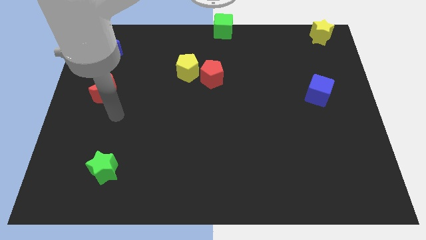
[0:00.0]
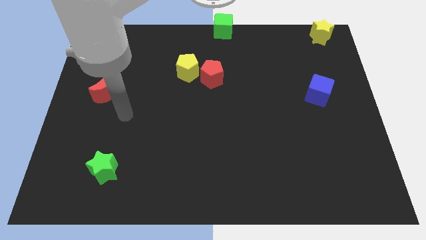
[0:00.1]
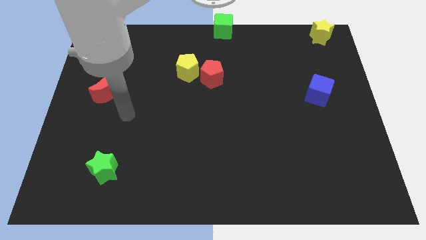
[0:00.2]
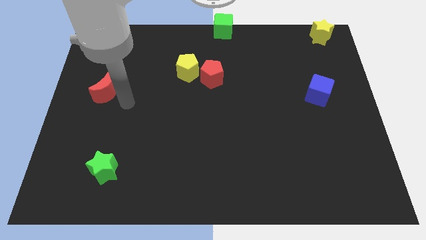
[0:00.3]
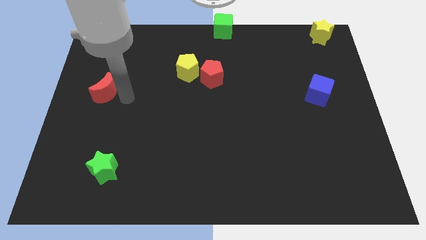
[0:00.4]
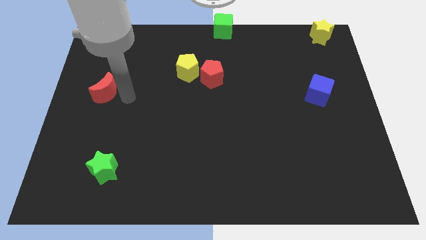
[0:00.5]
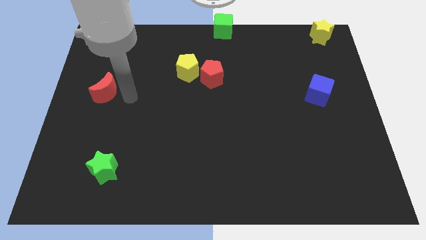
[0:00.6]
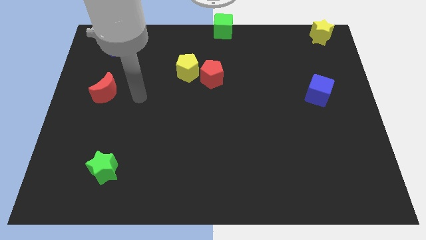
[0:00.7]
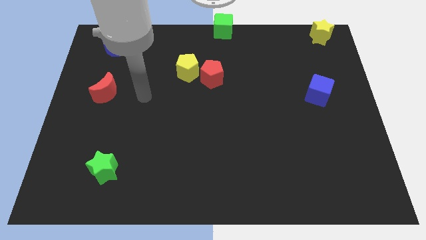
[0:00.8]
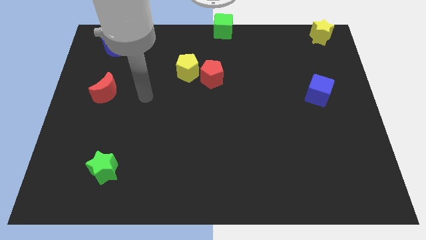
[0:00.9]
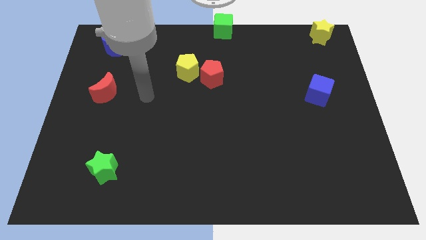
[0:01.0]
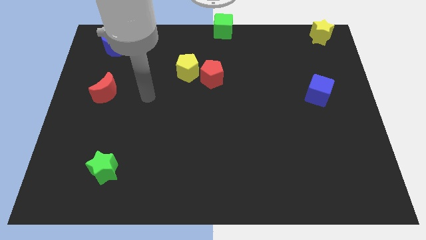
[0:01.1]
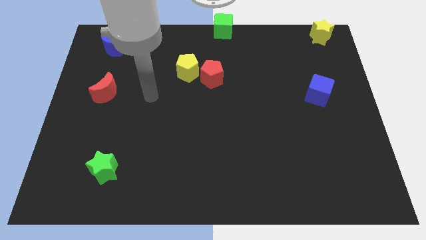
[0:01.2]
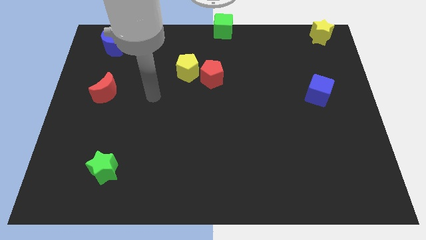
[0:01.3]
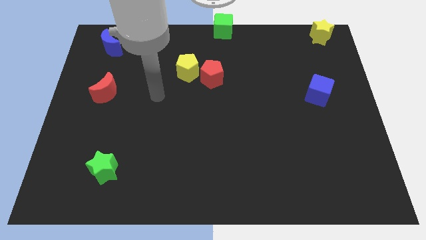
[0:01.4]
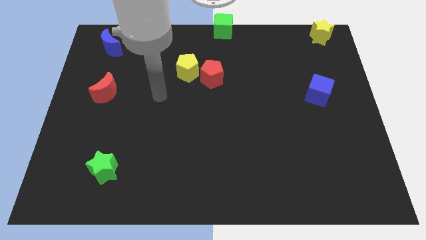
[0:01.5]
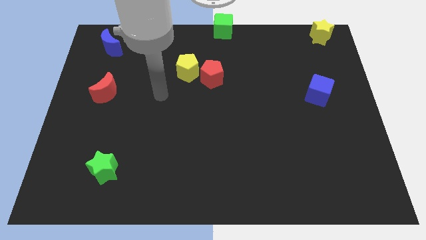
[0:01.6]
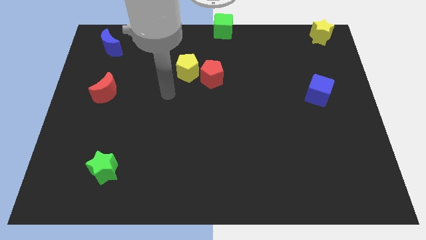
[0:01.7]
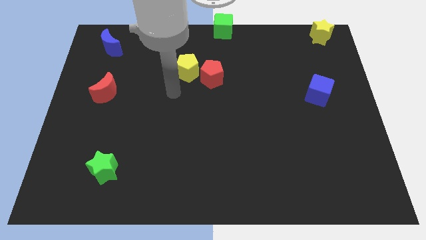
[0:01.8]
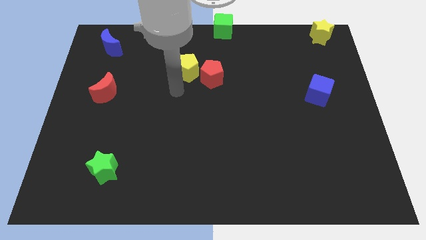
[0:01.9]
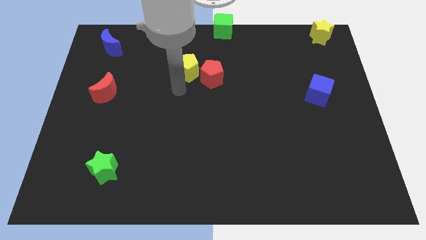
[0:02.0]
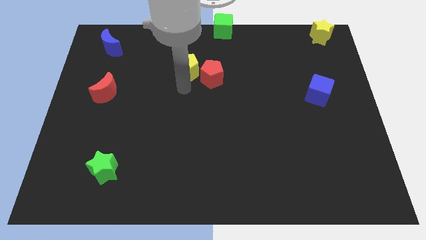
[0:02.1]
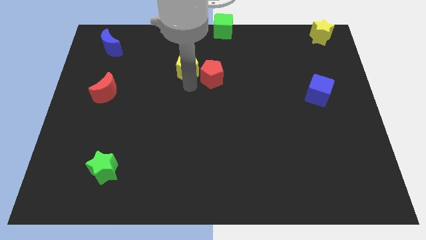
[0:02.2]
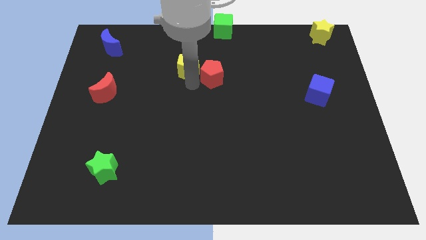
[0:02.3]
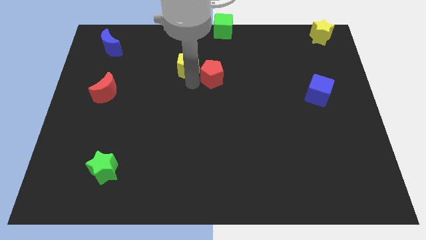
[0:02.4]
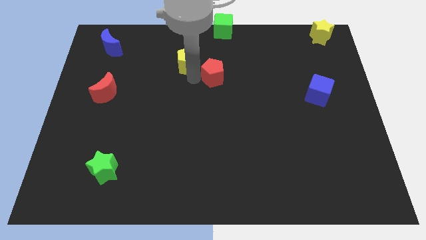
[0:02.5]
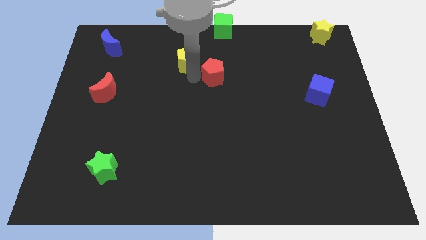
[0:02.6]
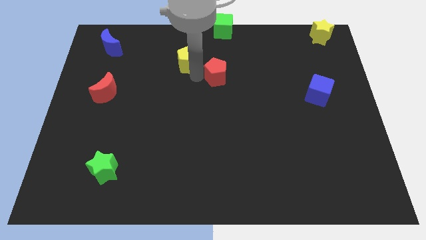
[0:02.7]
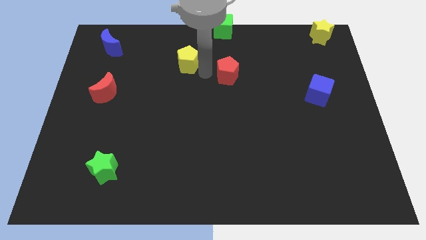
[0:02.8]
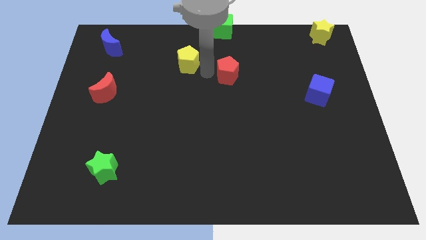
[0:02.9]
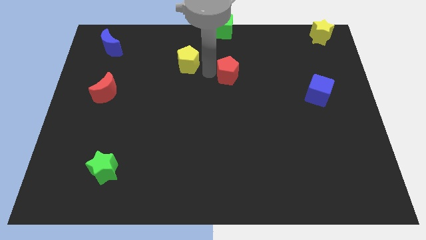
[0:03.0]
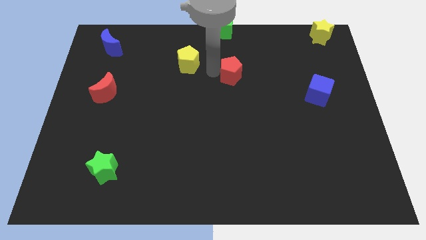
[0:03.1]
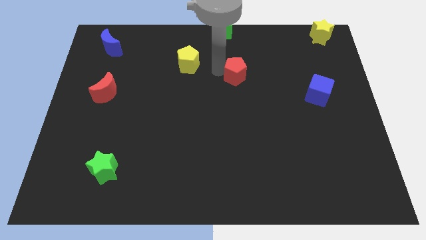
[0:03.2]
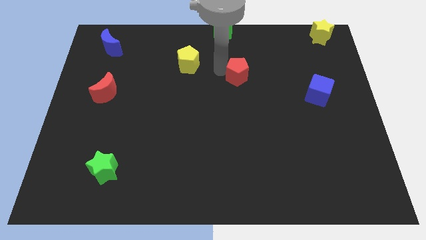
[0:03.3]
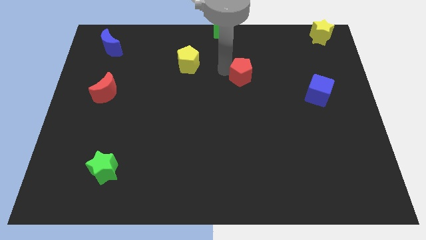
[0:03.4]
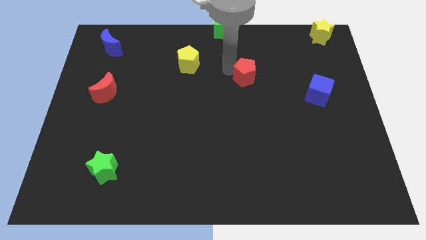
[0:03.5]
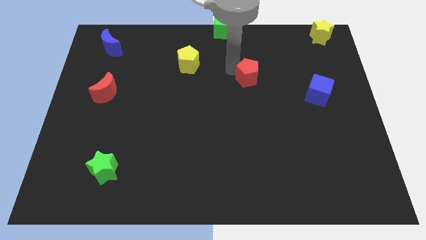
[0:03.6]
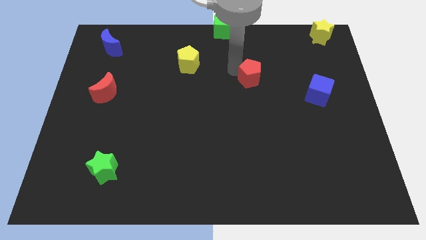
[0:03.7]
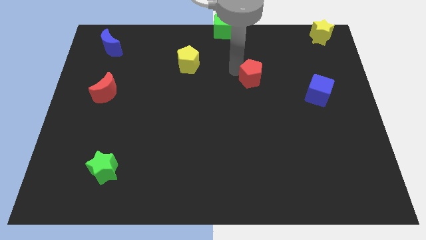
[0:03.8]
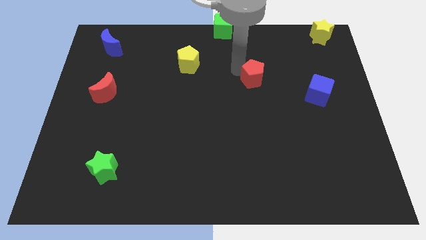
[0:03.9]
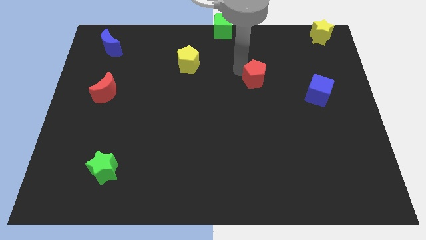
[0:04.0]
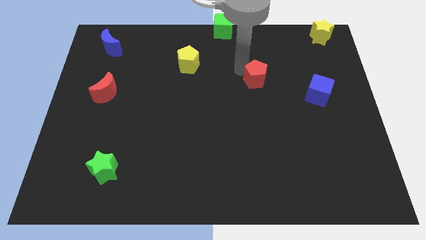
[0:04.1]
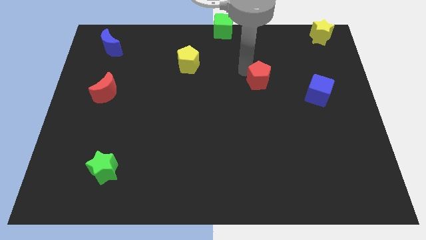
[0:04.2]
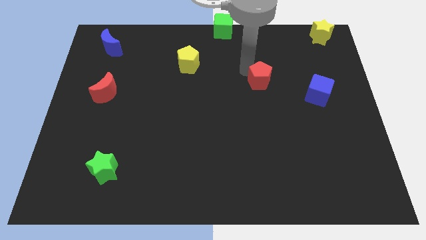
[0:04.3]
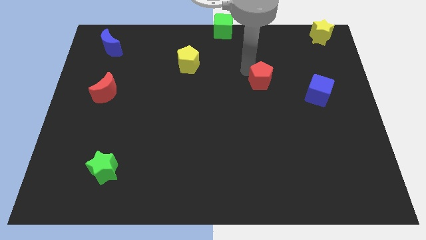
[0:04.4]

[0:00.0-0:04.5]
move the red pentagon away from the yellow pentagon

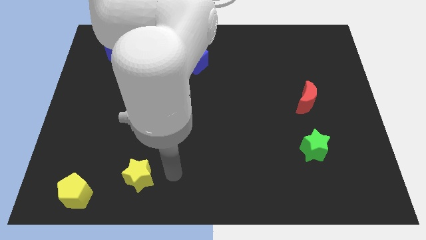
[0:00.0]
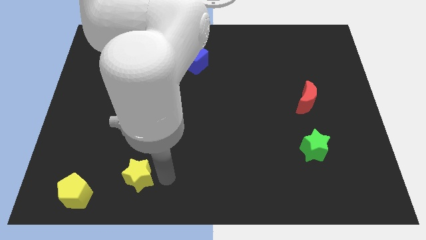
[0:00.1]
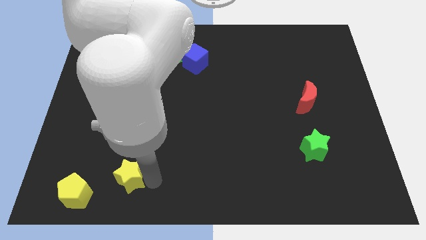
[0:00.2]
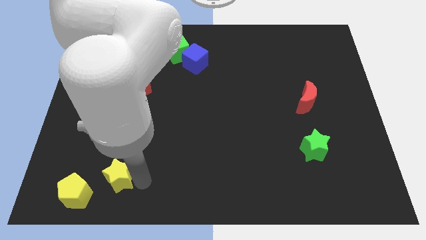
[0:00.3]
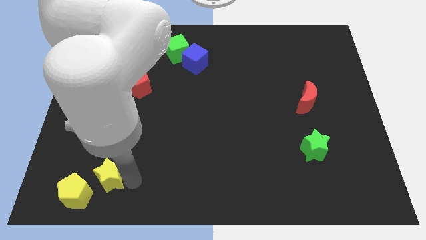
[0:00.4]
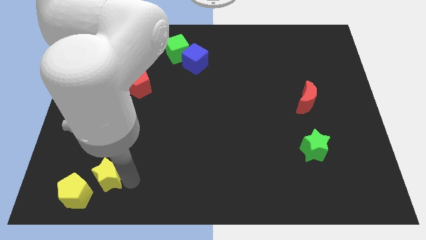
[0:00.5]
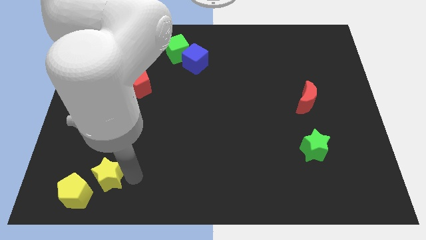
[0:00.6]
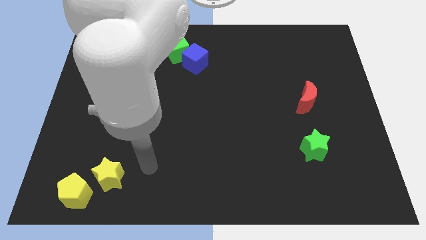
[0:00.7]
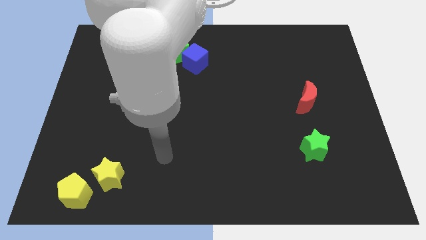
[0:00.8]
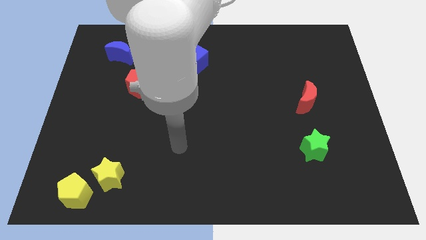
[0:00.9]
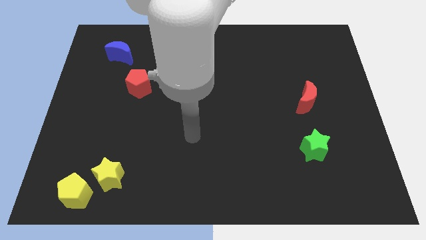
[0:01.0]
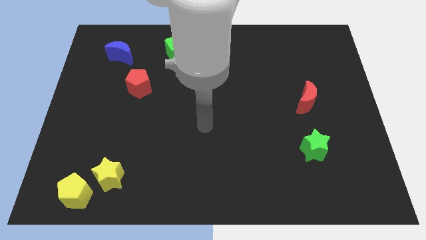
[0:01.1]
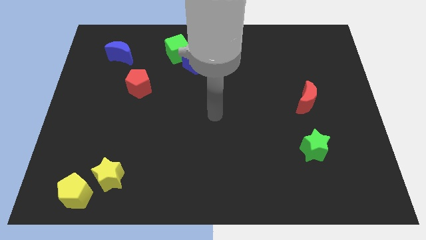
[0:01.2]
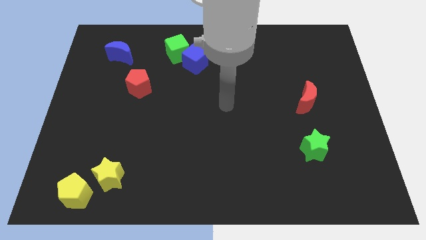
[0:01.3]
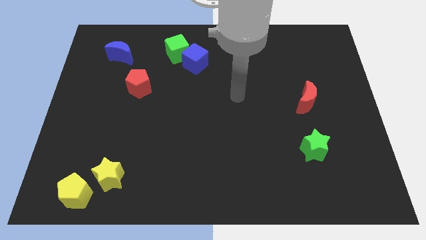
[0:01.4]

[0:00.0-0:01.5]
push the yellow star close to the yellow pentagon

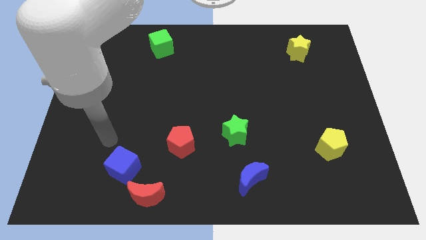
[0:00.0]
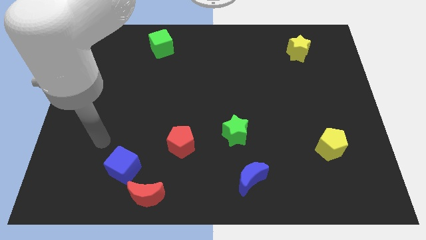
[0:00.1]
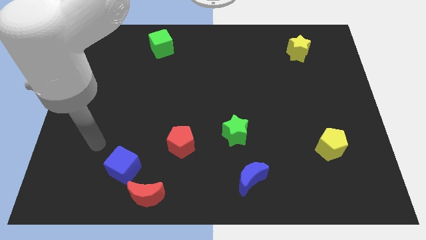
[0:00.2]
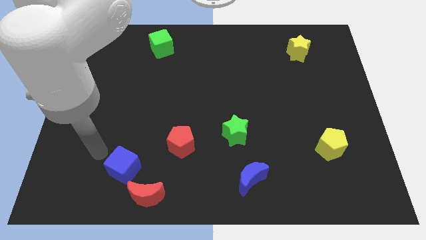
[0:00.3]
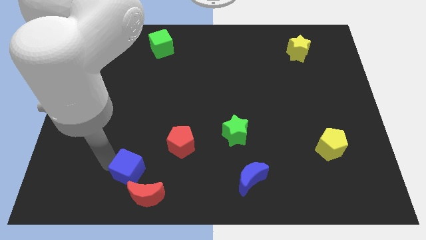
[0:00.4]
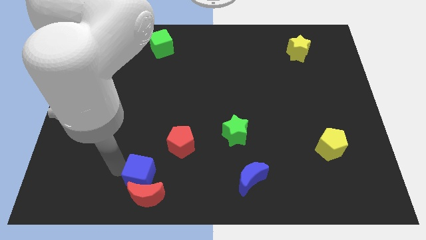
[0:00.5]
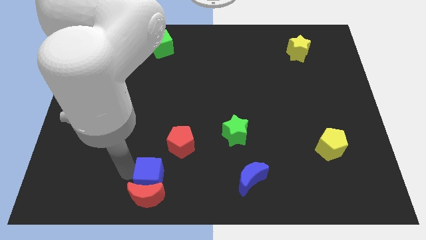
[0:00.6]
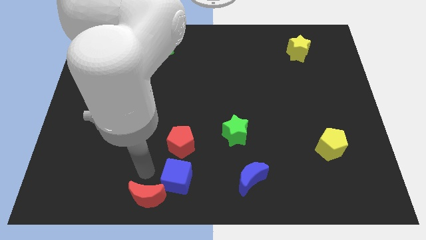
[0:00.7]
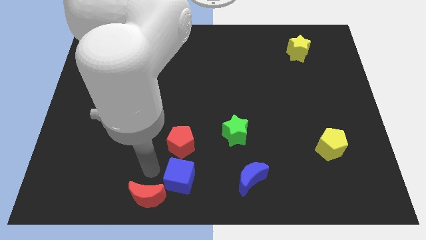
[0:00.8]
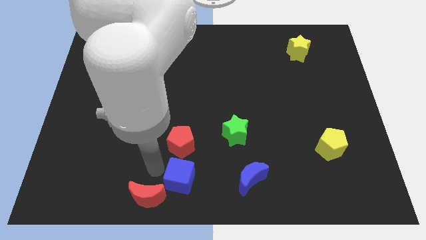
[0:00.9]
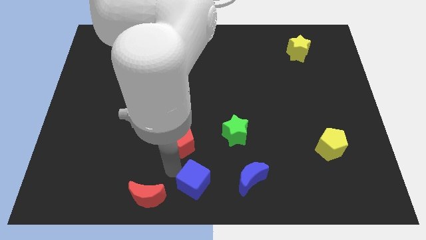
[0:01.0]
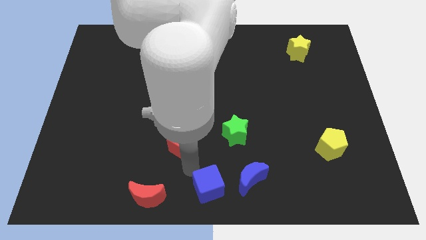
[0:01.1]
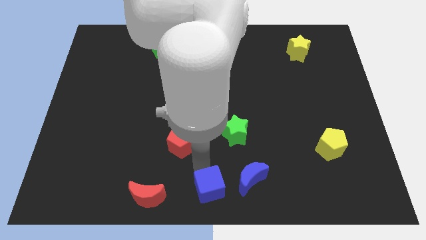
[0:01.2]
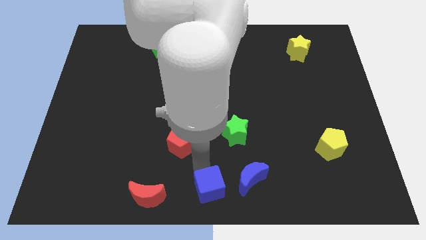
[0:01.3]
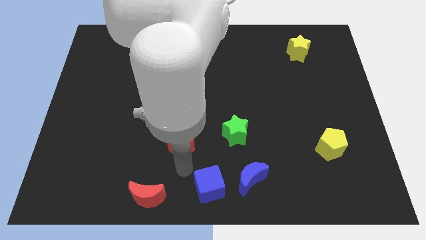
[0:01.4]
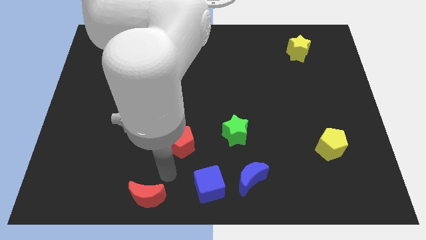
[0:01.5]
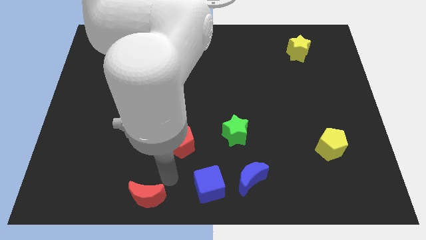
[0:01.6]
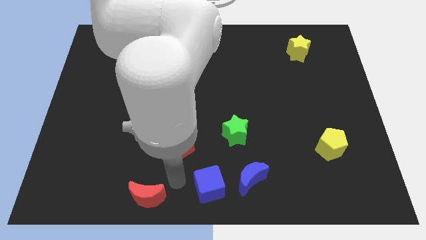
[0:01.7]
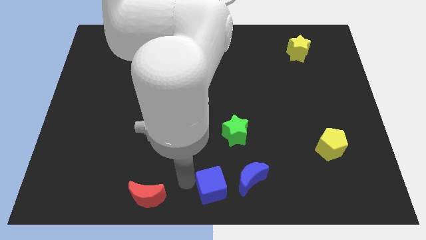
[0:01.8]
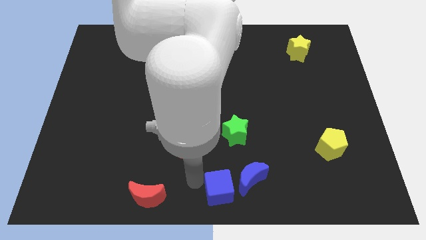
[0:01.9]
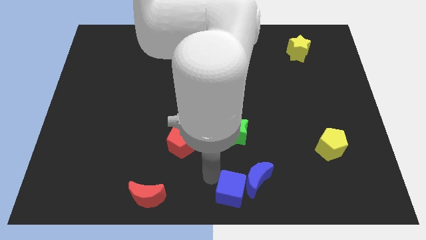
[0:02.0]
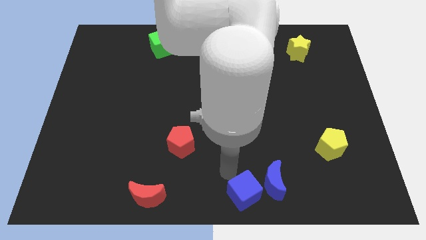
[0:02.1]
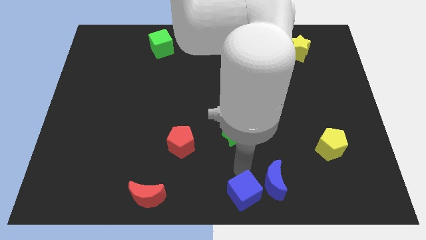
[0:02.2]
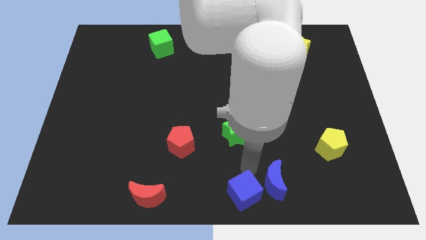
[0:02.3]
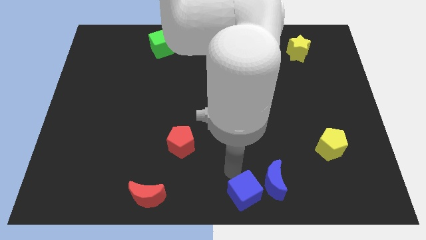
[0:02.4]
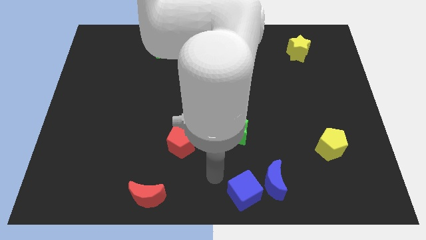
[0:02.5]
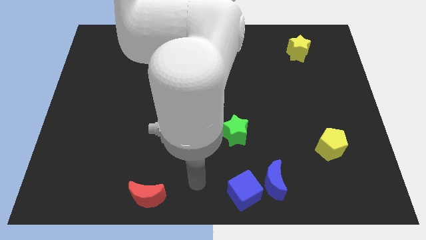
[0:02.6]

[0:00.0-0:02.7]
push blue cube into blue moon

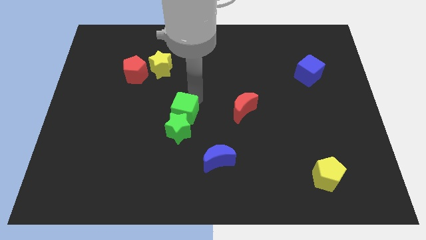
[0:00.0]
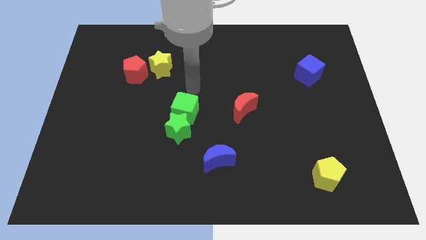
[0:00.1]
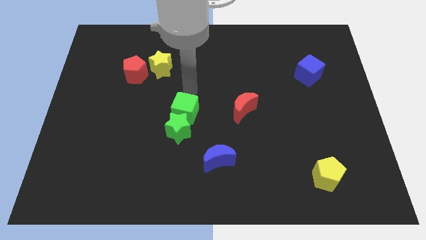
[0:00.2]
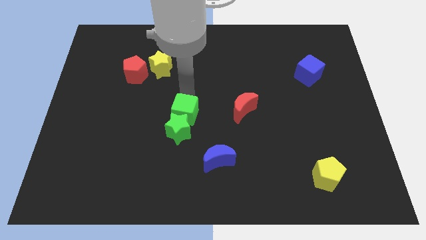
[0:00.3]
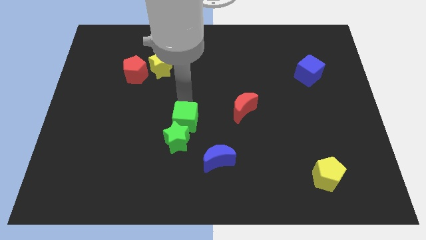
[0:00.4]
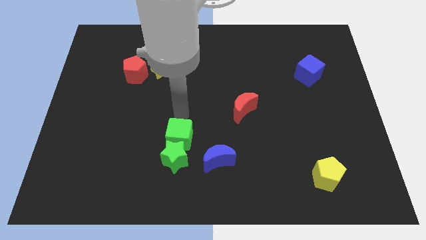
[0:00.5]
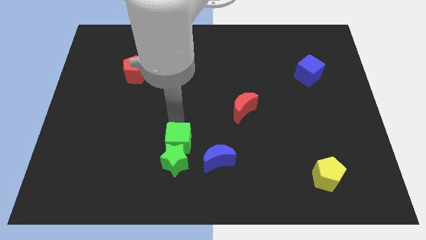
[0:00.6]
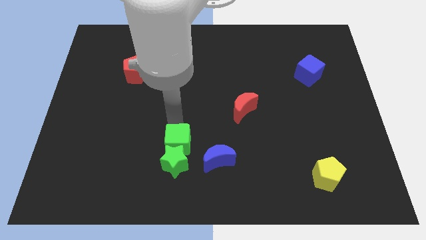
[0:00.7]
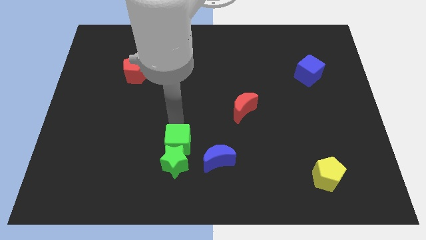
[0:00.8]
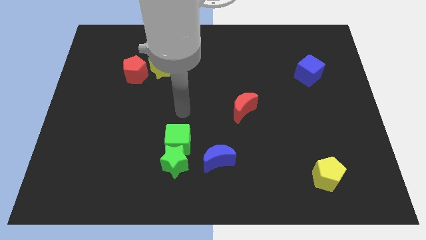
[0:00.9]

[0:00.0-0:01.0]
push the green blocks slightly to the bottom
